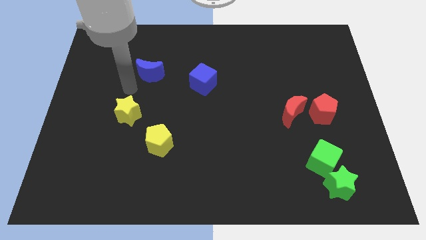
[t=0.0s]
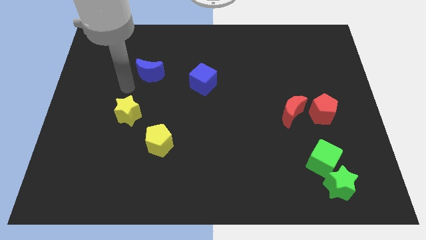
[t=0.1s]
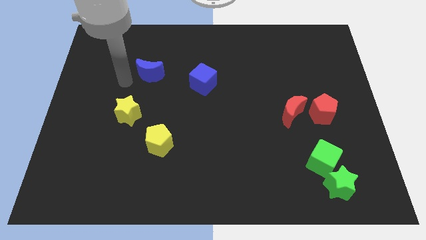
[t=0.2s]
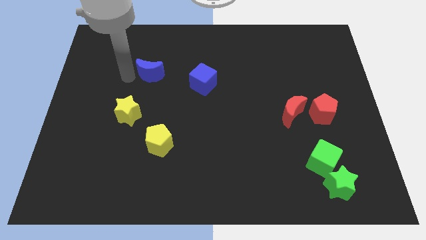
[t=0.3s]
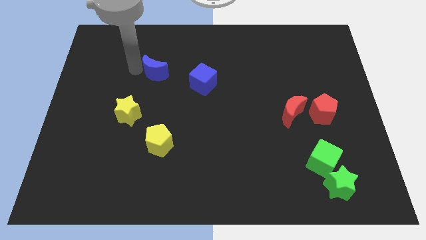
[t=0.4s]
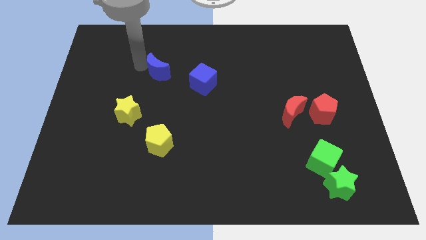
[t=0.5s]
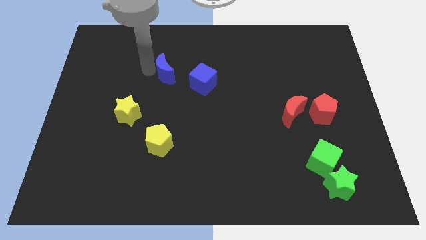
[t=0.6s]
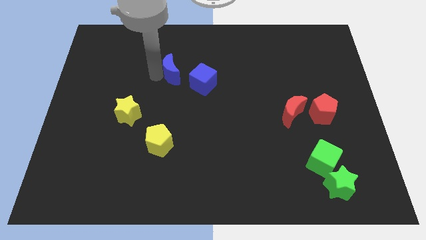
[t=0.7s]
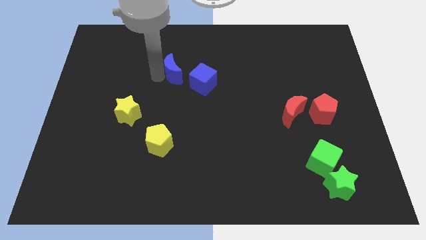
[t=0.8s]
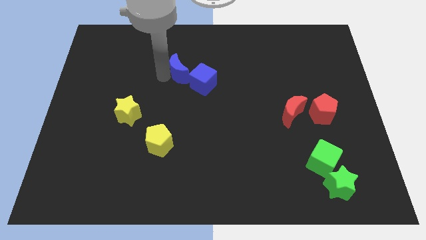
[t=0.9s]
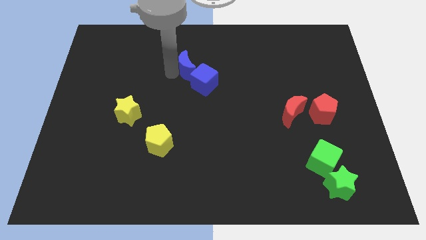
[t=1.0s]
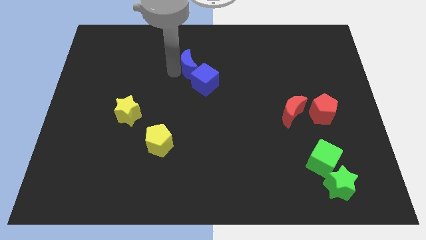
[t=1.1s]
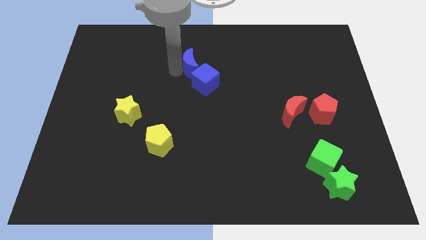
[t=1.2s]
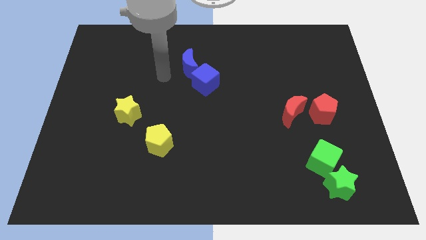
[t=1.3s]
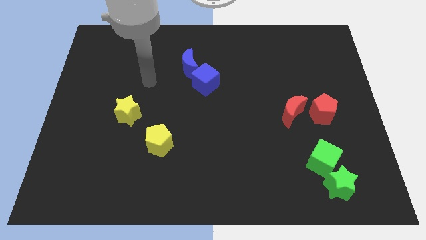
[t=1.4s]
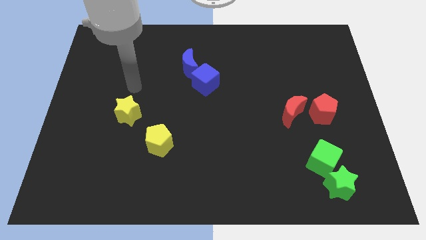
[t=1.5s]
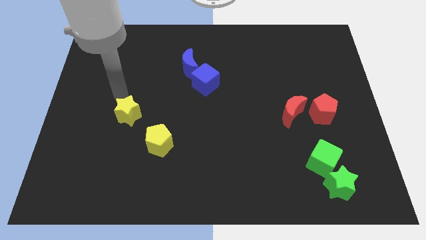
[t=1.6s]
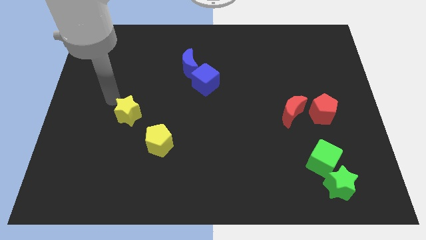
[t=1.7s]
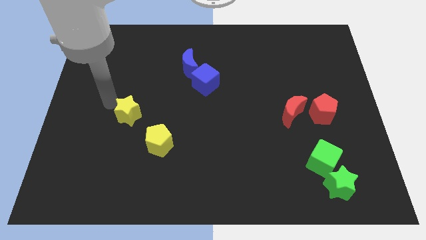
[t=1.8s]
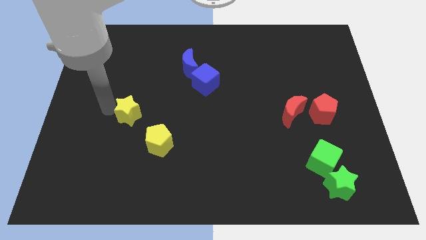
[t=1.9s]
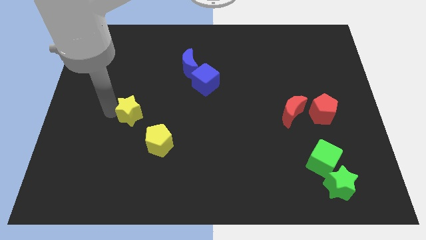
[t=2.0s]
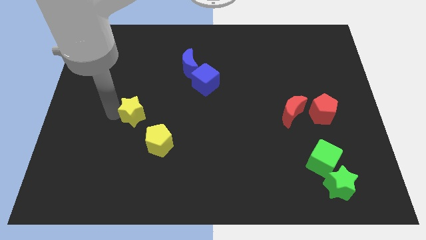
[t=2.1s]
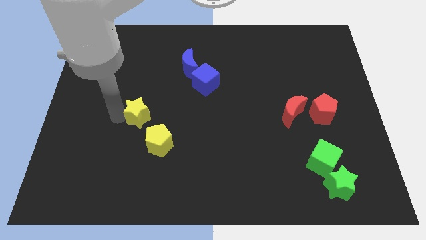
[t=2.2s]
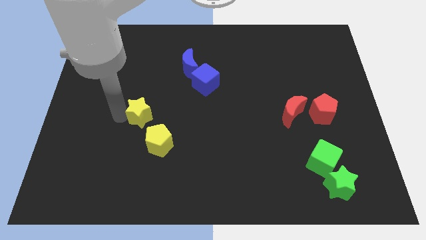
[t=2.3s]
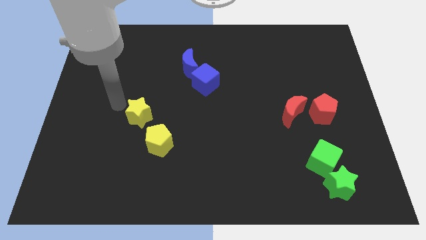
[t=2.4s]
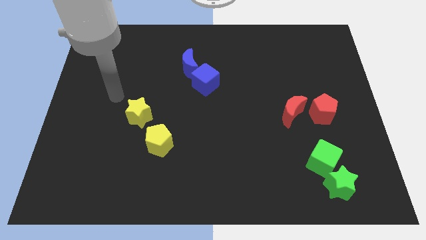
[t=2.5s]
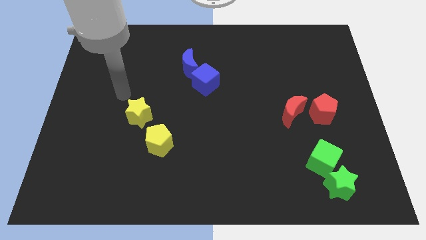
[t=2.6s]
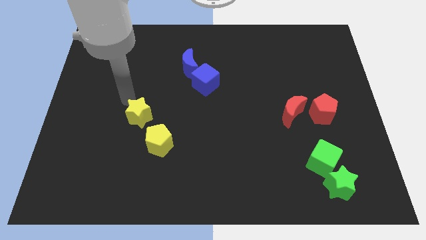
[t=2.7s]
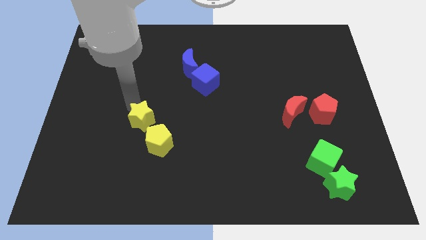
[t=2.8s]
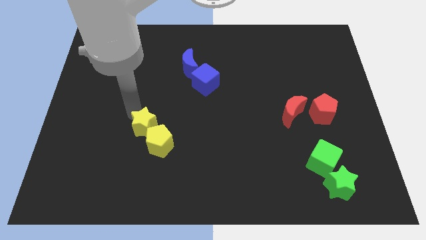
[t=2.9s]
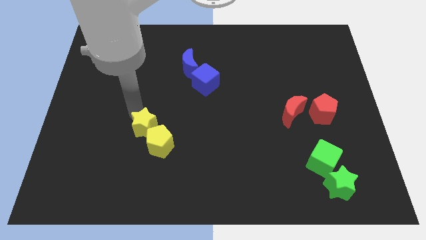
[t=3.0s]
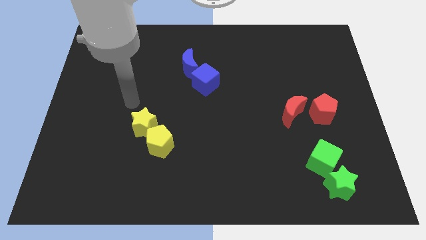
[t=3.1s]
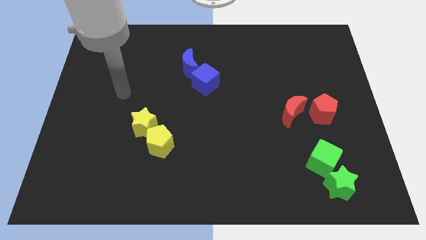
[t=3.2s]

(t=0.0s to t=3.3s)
move the yellow star to the top left of the yellow pentagon

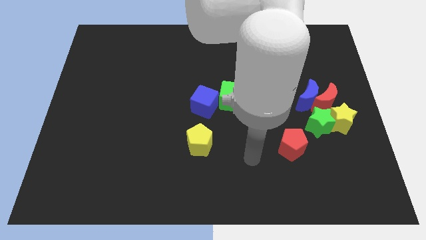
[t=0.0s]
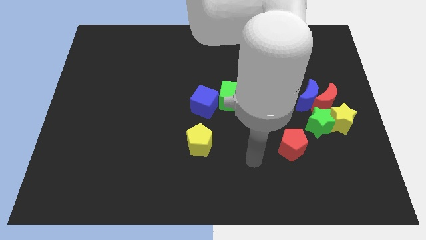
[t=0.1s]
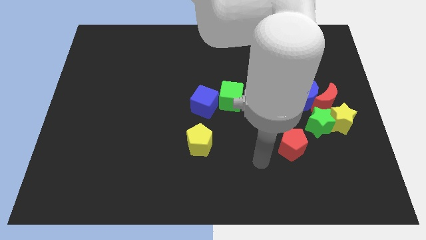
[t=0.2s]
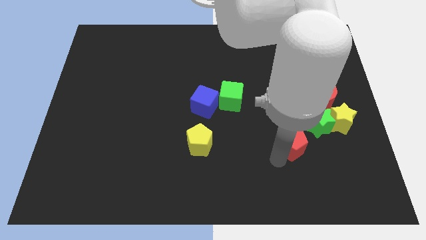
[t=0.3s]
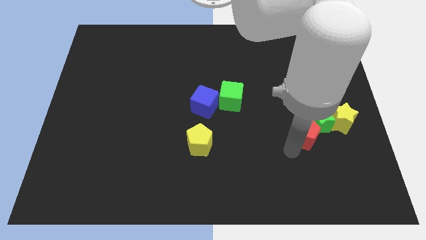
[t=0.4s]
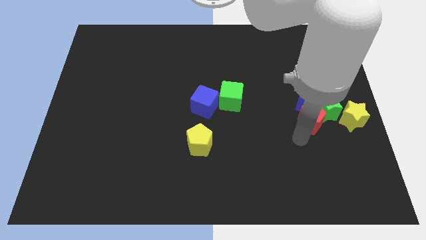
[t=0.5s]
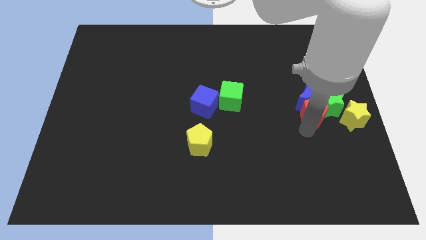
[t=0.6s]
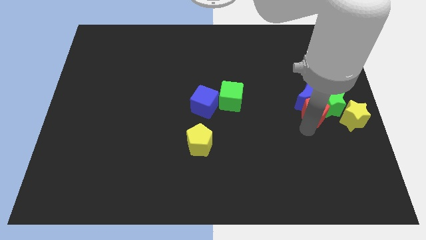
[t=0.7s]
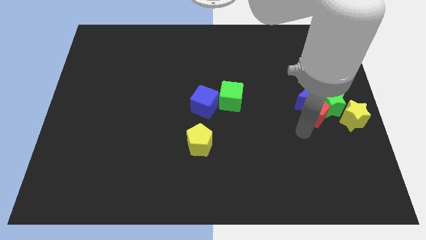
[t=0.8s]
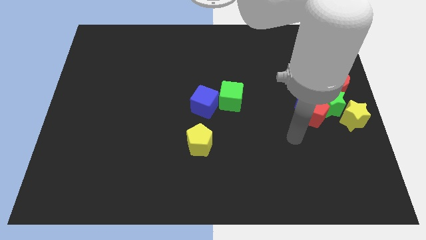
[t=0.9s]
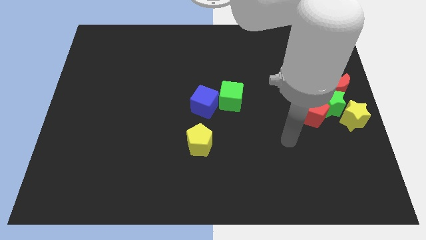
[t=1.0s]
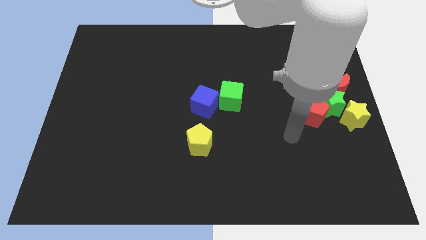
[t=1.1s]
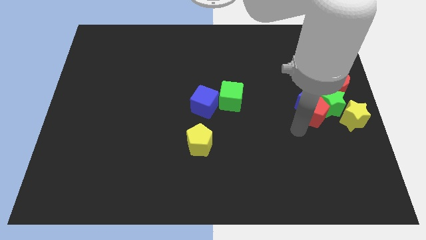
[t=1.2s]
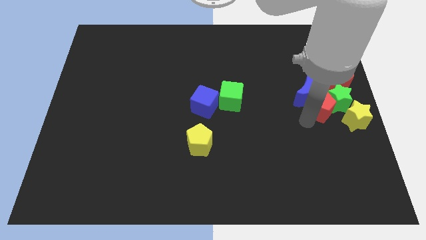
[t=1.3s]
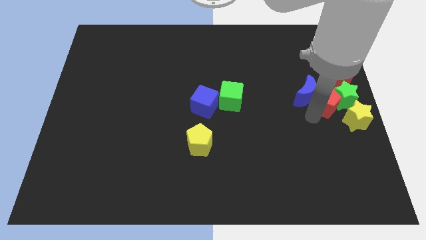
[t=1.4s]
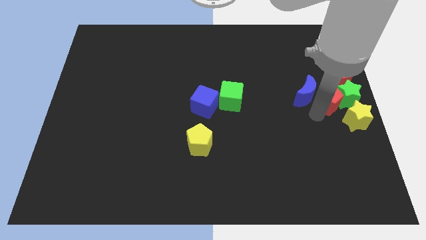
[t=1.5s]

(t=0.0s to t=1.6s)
put the red pentagon into the green star

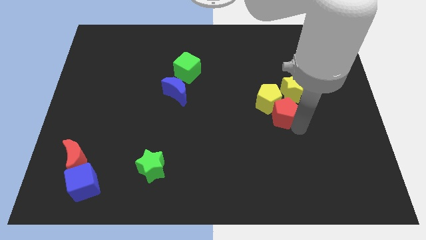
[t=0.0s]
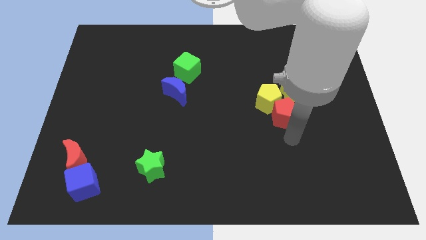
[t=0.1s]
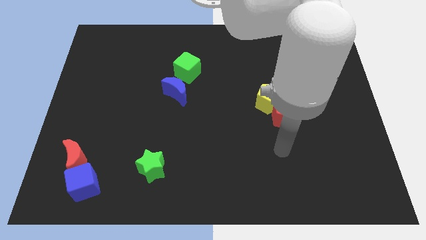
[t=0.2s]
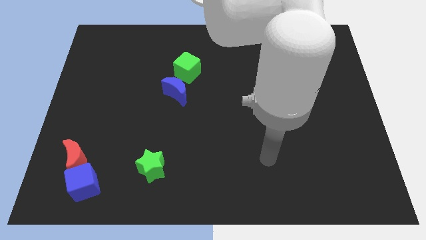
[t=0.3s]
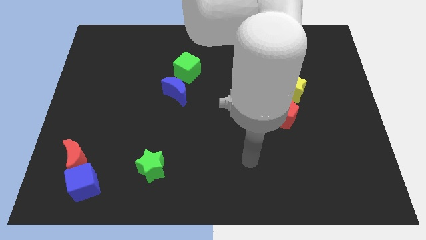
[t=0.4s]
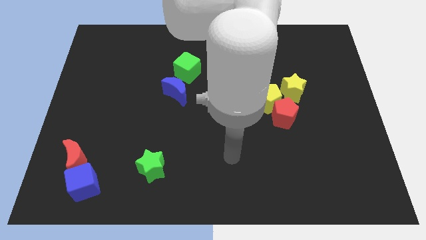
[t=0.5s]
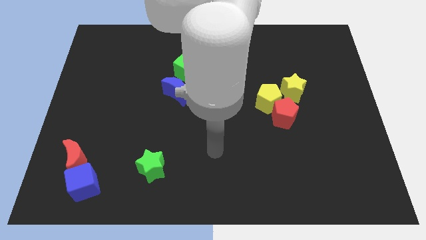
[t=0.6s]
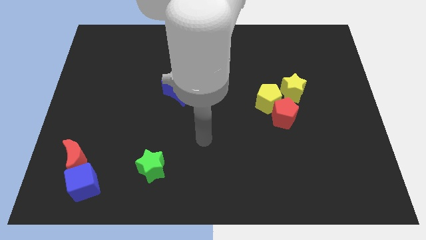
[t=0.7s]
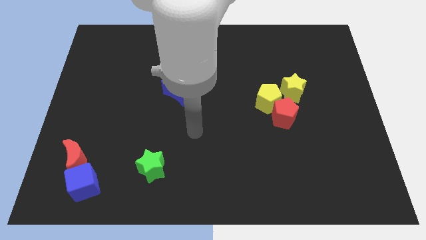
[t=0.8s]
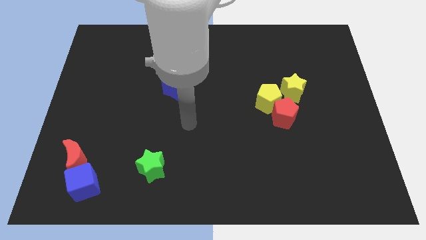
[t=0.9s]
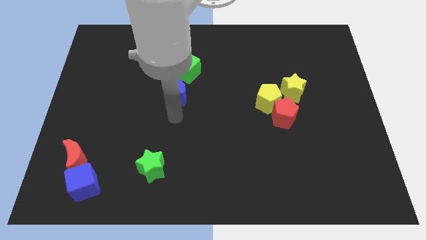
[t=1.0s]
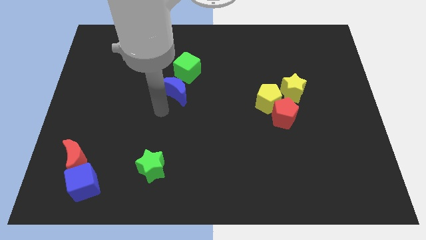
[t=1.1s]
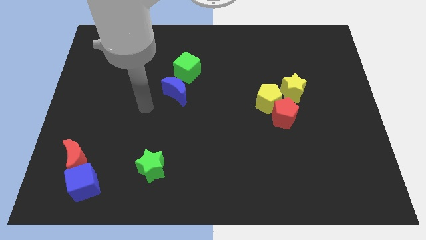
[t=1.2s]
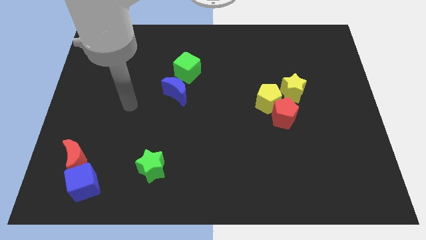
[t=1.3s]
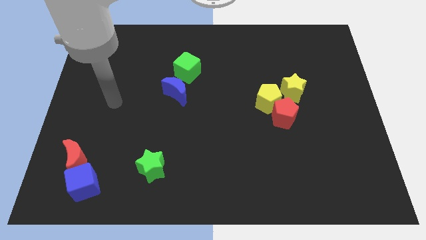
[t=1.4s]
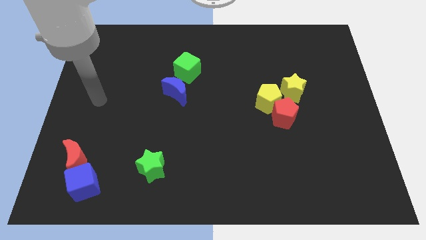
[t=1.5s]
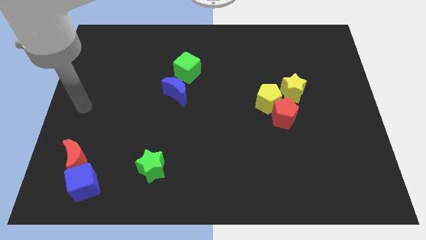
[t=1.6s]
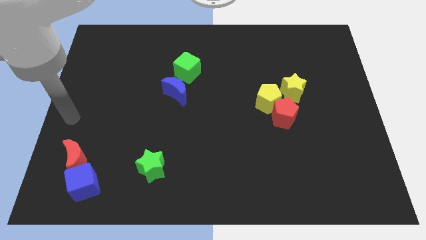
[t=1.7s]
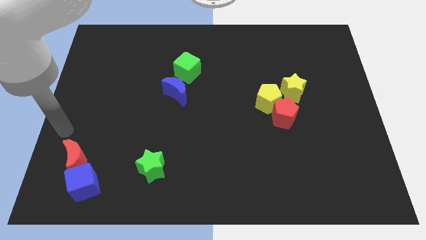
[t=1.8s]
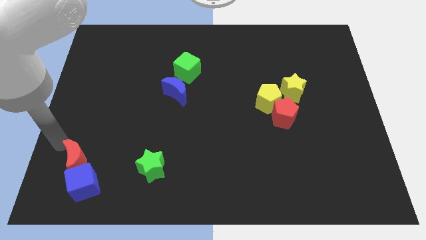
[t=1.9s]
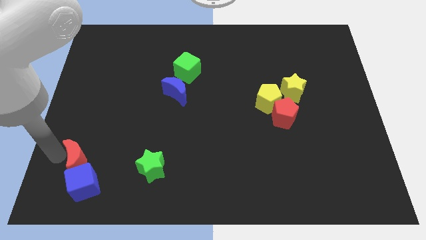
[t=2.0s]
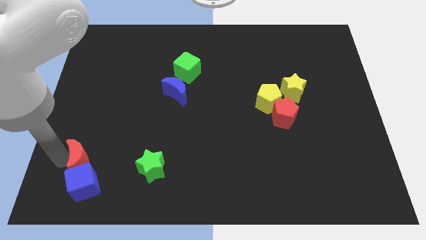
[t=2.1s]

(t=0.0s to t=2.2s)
move the arm towards the left of the red crescent

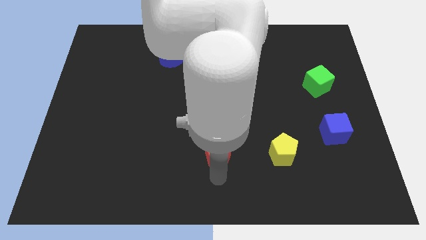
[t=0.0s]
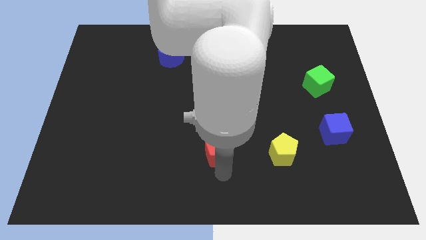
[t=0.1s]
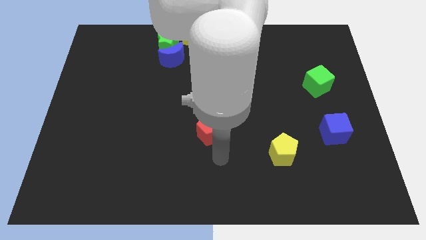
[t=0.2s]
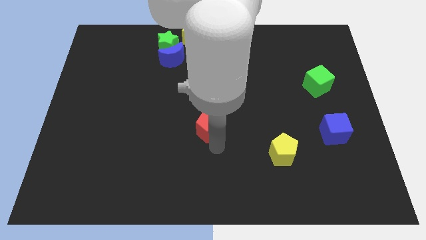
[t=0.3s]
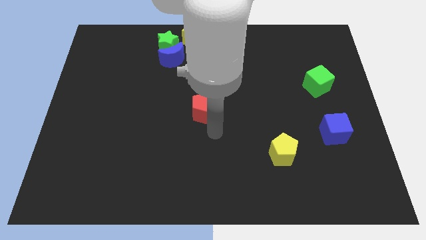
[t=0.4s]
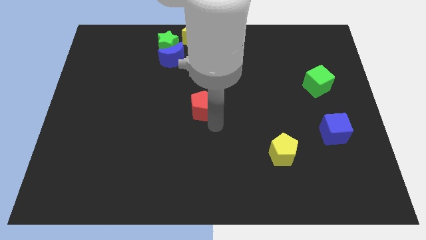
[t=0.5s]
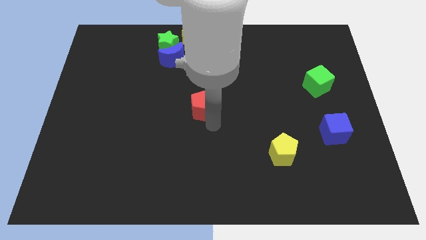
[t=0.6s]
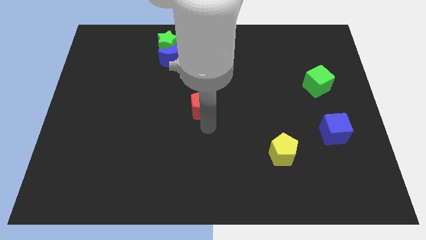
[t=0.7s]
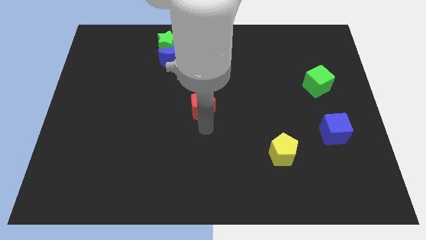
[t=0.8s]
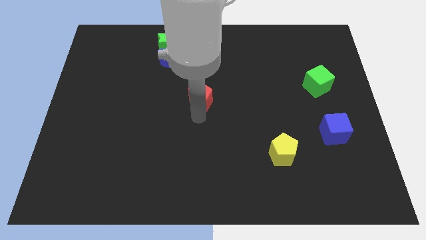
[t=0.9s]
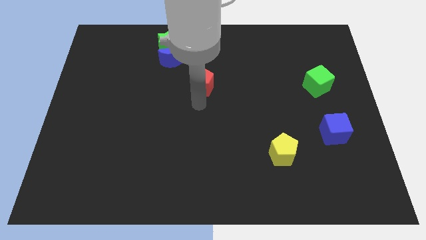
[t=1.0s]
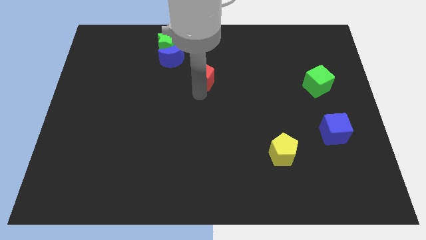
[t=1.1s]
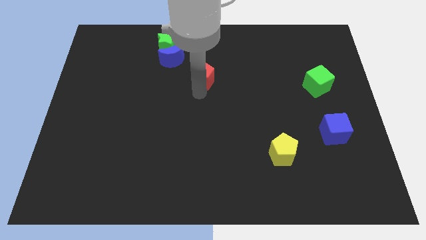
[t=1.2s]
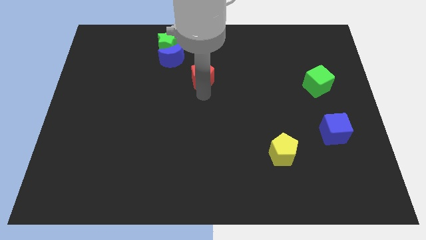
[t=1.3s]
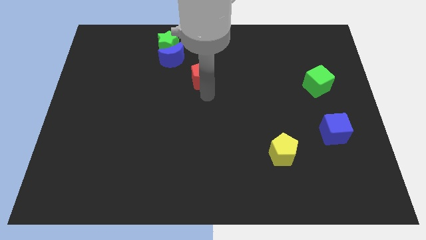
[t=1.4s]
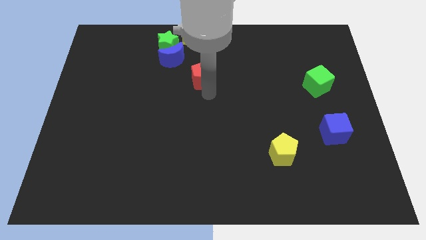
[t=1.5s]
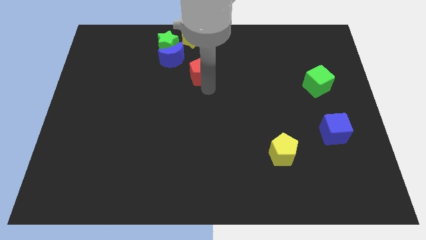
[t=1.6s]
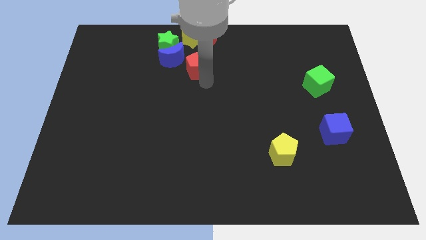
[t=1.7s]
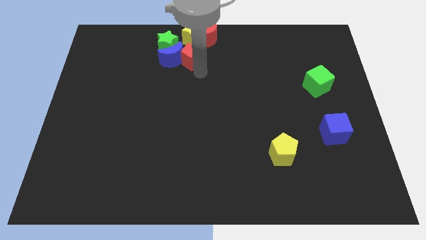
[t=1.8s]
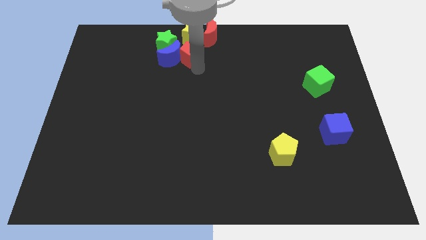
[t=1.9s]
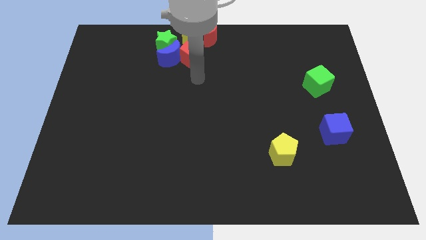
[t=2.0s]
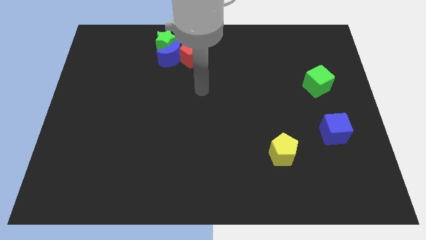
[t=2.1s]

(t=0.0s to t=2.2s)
push the red pentagon into the group of blocks
